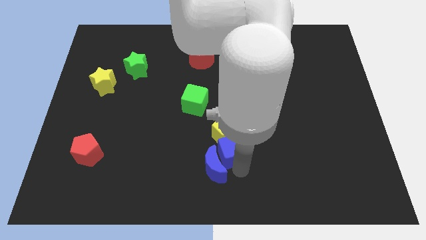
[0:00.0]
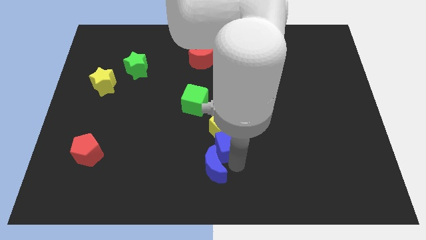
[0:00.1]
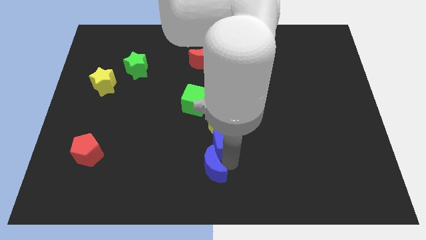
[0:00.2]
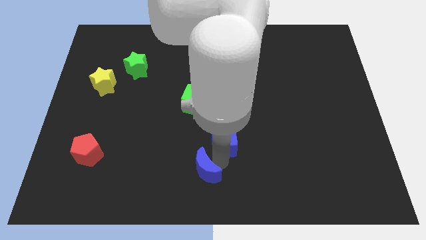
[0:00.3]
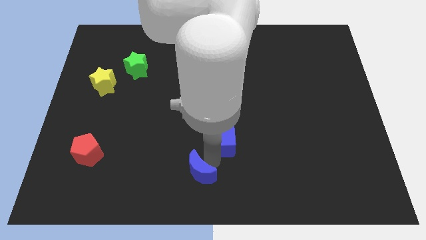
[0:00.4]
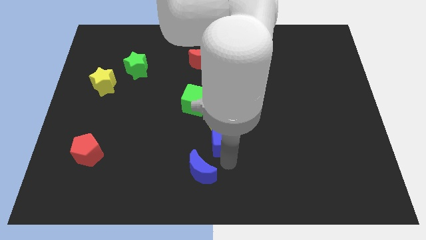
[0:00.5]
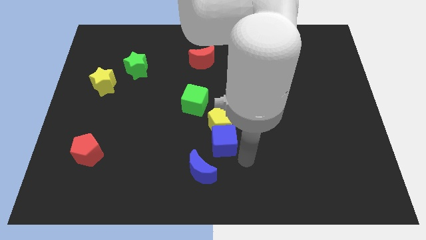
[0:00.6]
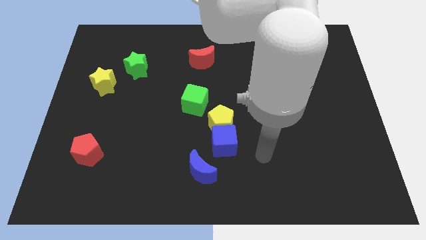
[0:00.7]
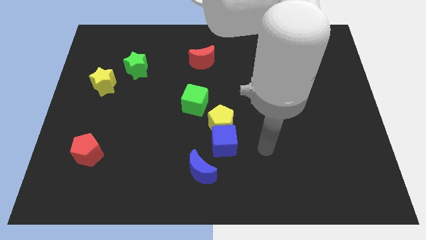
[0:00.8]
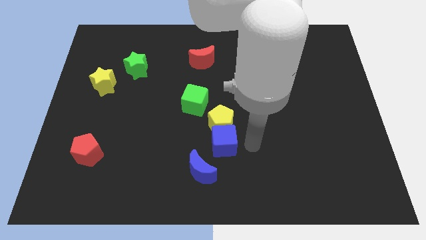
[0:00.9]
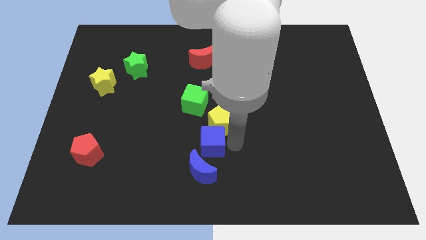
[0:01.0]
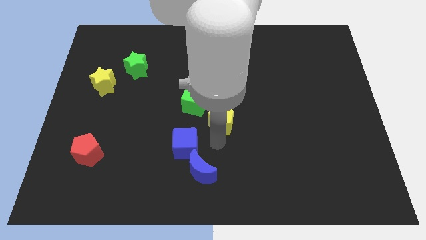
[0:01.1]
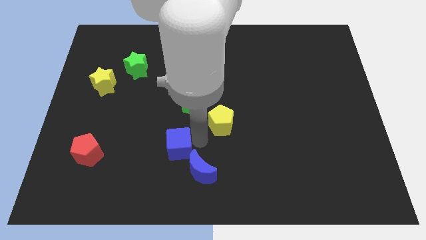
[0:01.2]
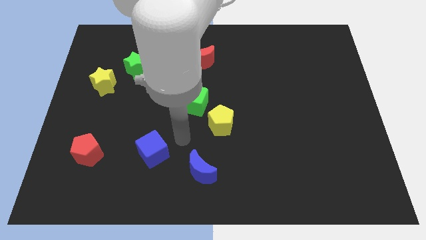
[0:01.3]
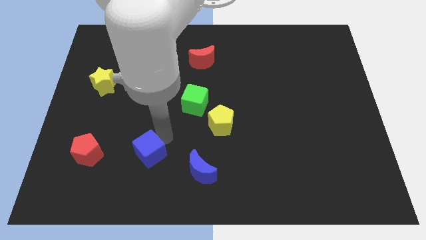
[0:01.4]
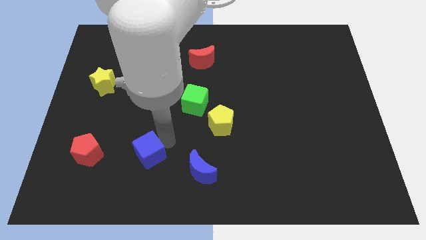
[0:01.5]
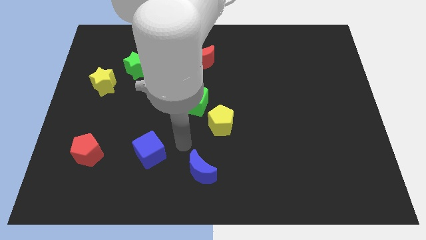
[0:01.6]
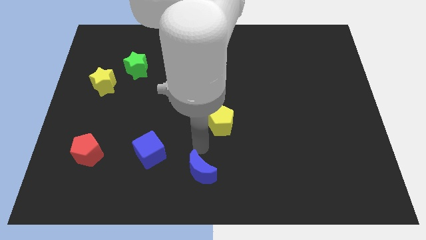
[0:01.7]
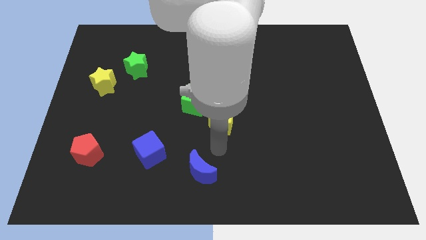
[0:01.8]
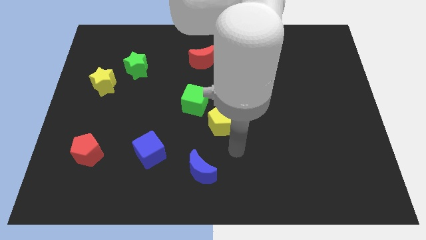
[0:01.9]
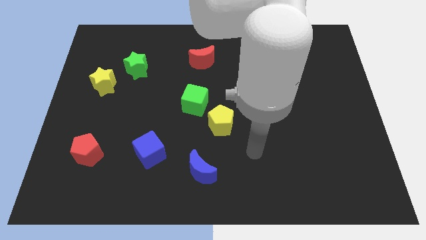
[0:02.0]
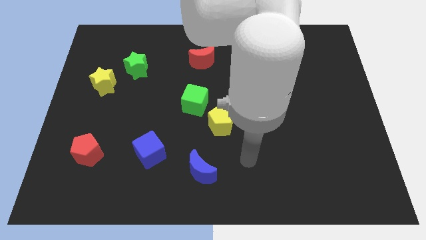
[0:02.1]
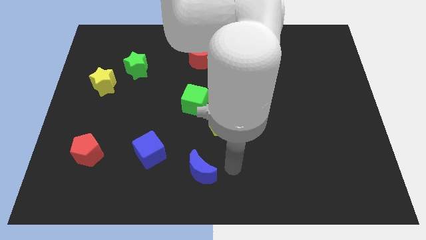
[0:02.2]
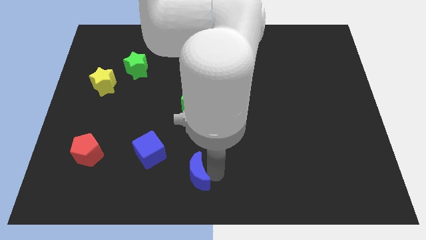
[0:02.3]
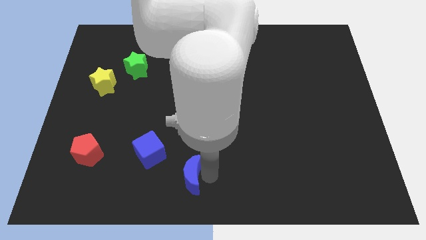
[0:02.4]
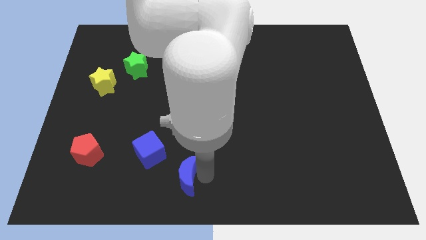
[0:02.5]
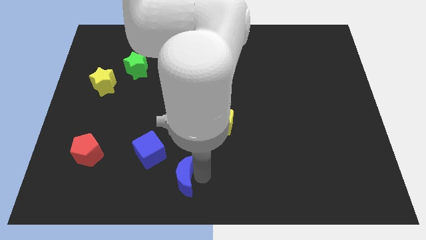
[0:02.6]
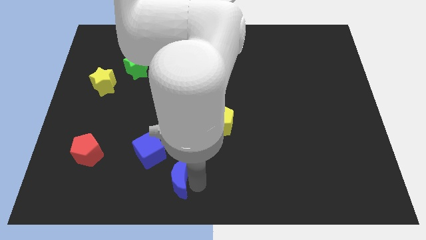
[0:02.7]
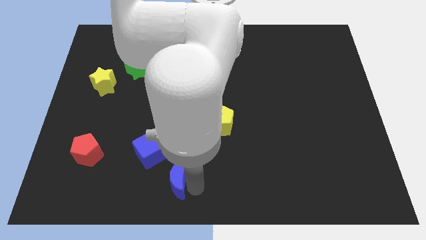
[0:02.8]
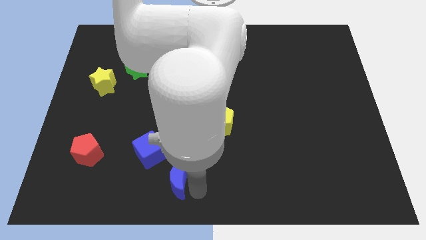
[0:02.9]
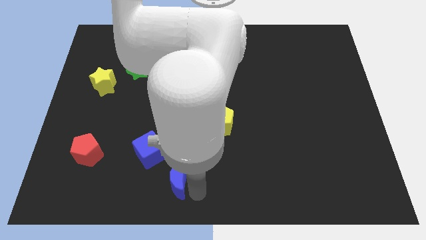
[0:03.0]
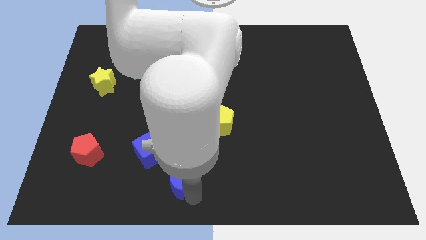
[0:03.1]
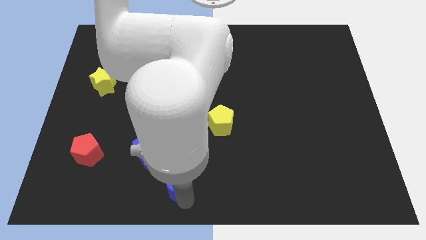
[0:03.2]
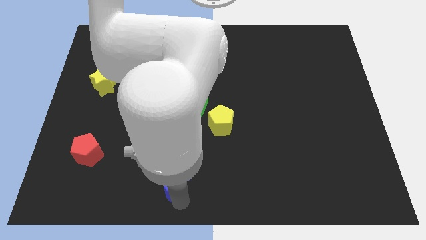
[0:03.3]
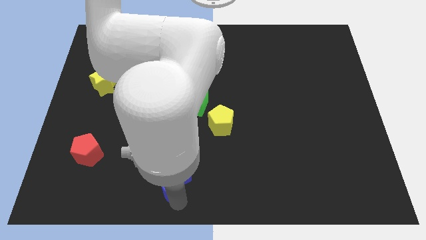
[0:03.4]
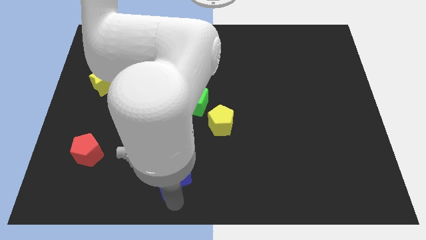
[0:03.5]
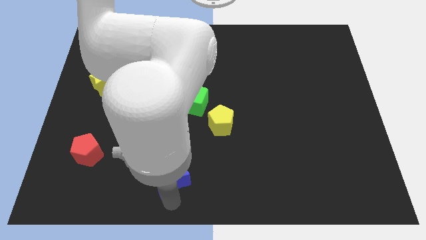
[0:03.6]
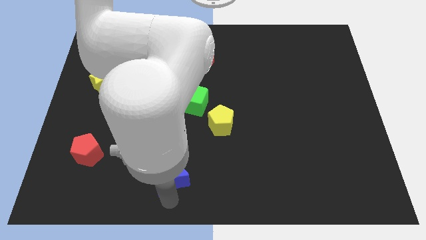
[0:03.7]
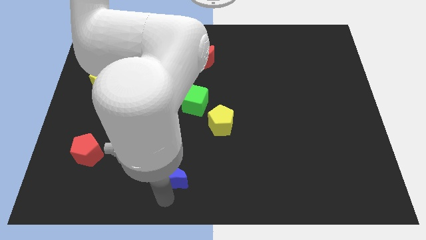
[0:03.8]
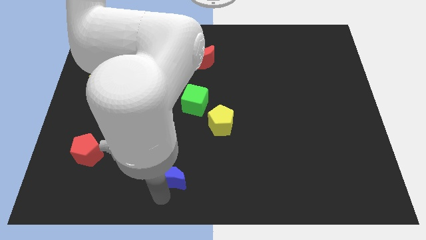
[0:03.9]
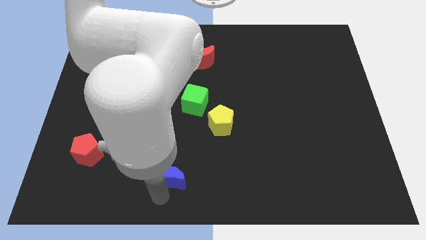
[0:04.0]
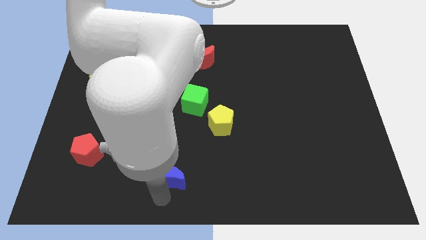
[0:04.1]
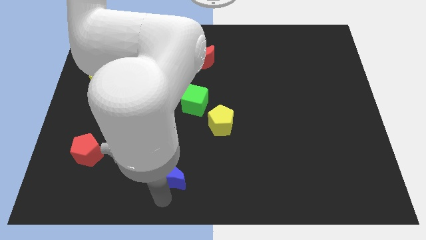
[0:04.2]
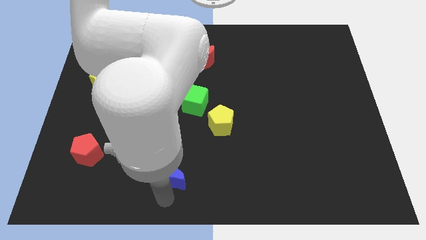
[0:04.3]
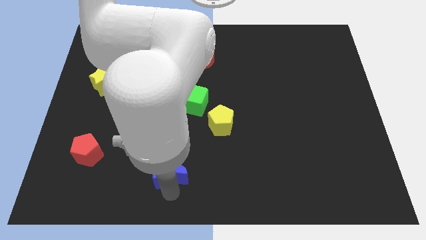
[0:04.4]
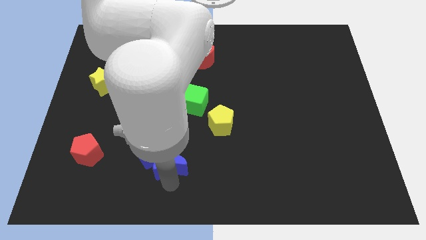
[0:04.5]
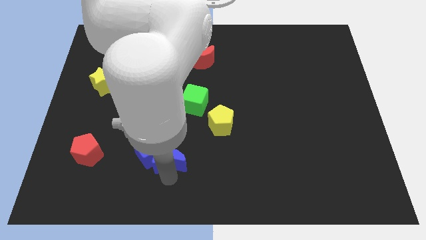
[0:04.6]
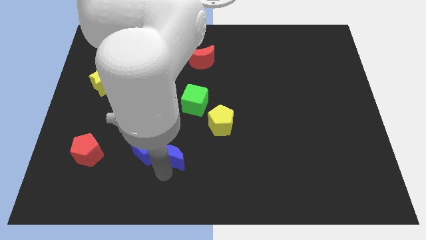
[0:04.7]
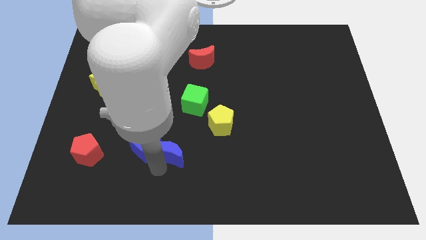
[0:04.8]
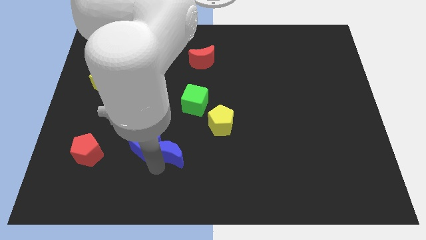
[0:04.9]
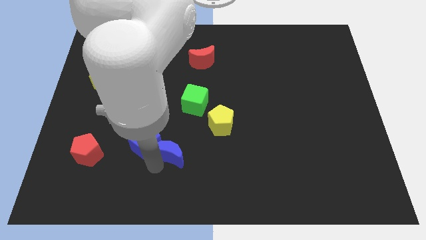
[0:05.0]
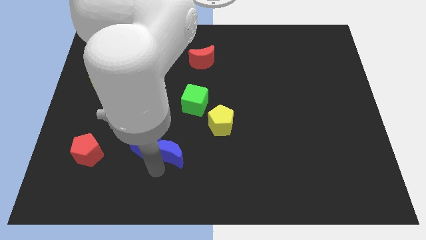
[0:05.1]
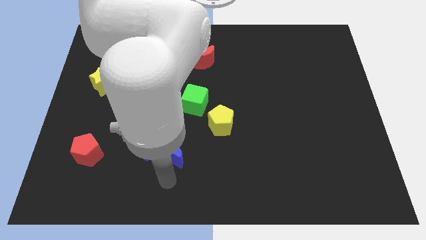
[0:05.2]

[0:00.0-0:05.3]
move the blue moon into the blue cube

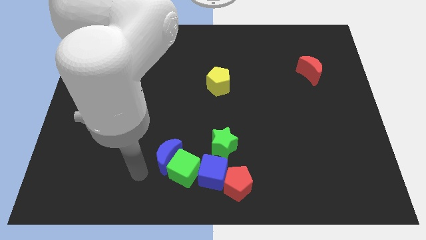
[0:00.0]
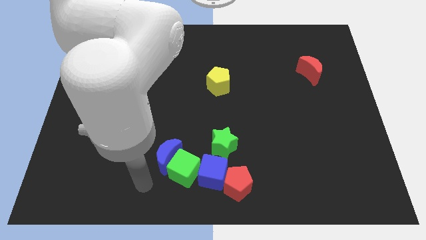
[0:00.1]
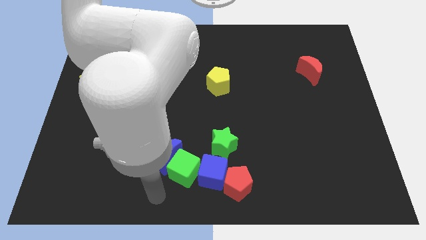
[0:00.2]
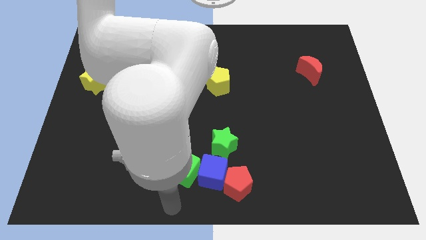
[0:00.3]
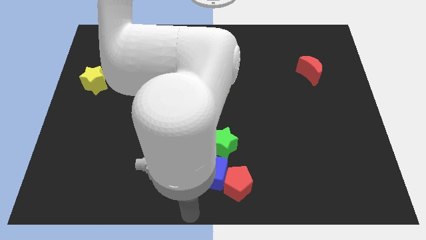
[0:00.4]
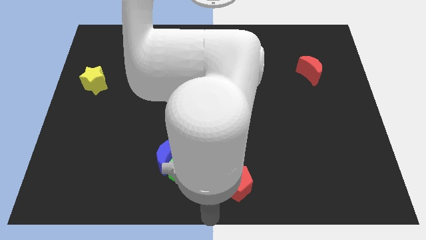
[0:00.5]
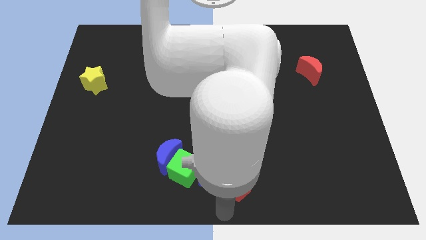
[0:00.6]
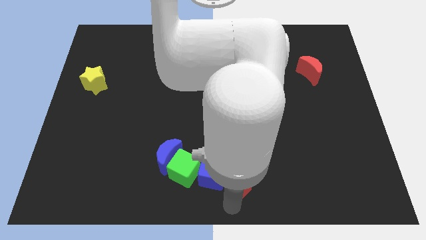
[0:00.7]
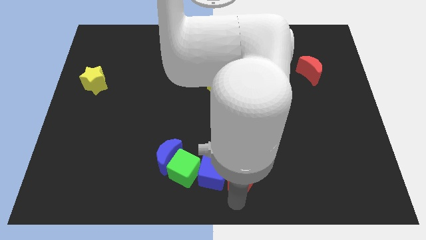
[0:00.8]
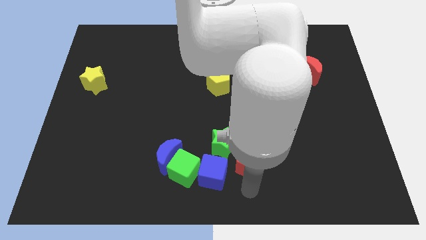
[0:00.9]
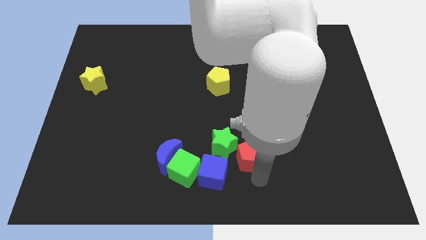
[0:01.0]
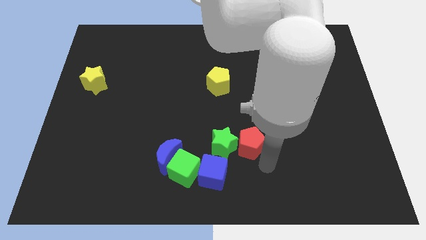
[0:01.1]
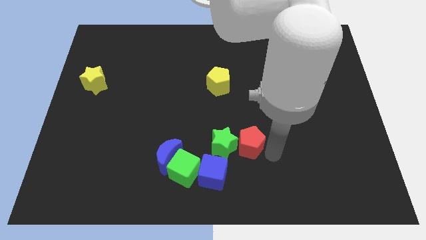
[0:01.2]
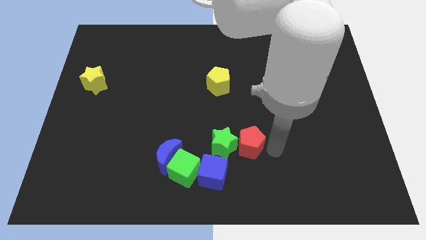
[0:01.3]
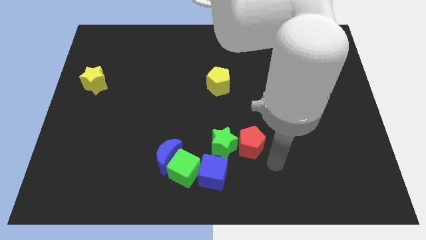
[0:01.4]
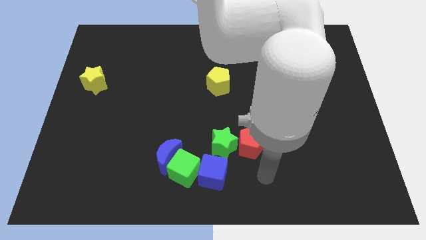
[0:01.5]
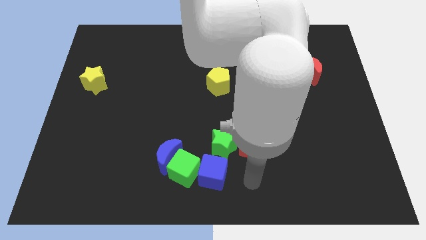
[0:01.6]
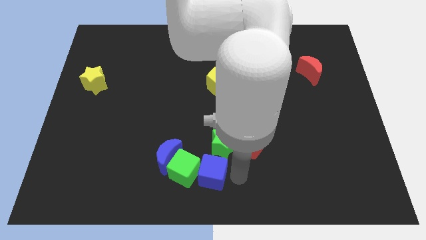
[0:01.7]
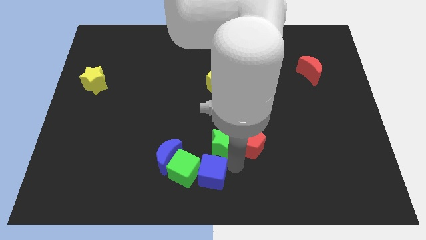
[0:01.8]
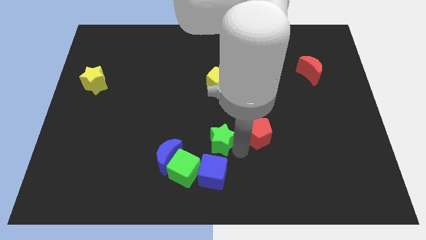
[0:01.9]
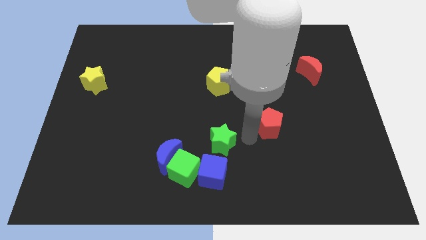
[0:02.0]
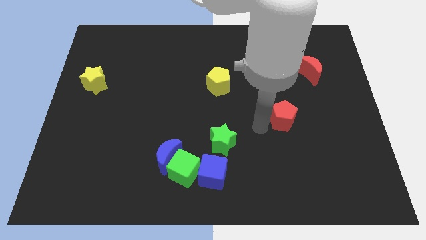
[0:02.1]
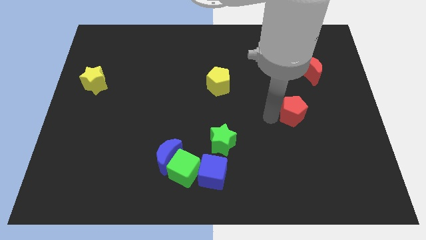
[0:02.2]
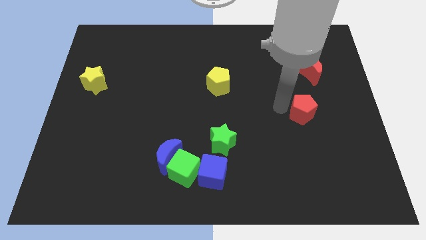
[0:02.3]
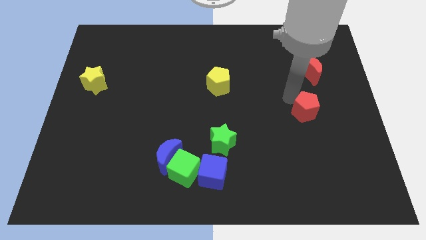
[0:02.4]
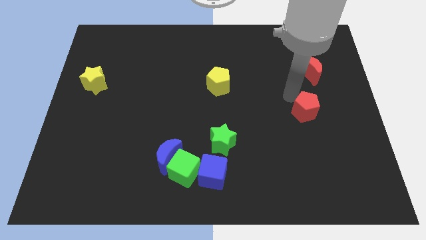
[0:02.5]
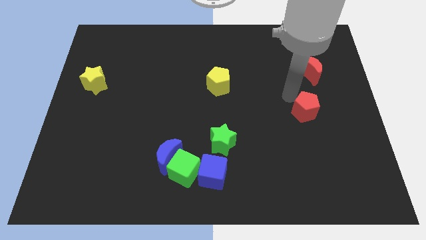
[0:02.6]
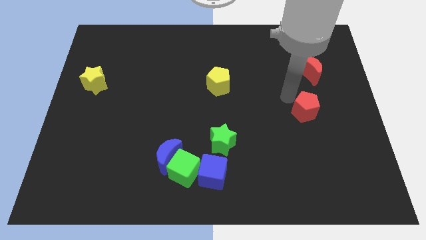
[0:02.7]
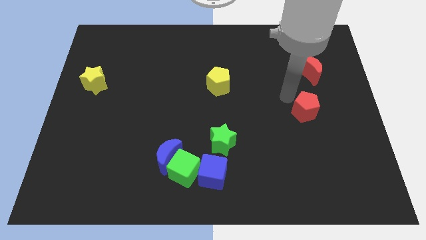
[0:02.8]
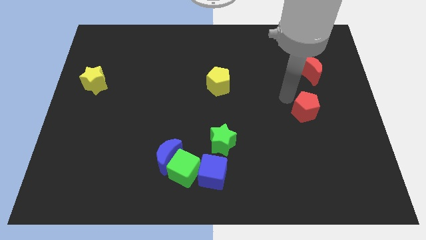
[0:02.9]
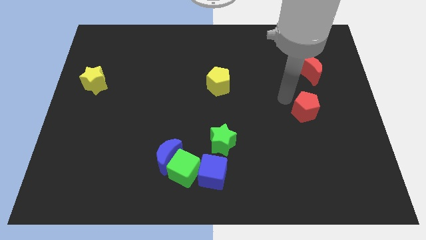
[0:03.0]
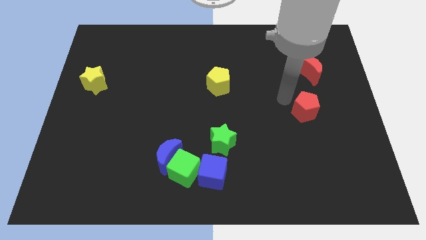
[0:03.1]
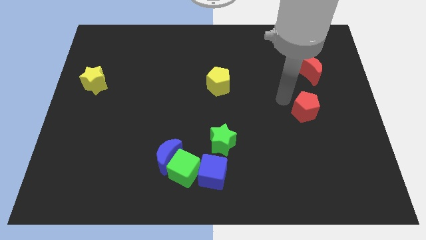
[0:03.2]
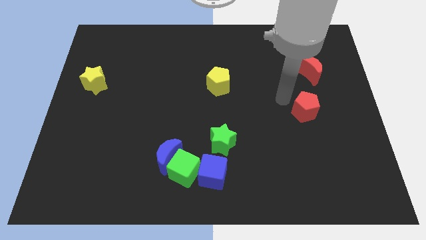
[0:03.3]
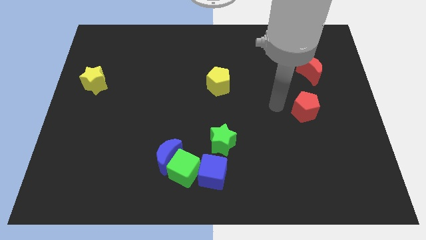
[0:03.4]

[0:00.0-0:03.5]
separate the red pentagon from the group of block

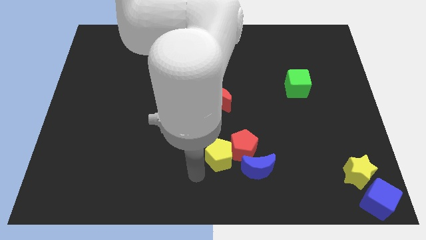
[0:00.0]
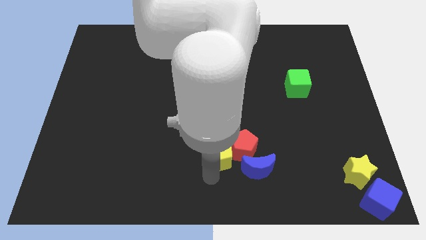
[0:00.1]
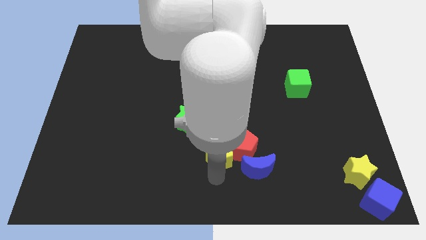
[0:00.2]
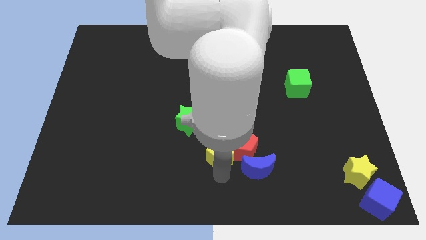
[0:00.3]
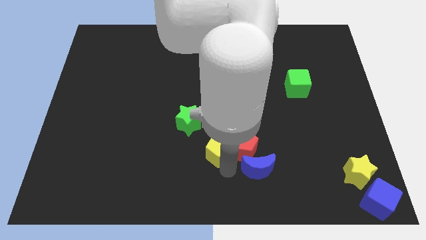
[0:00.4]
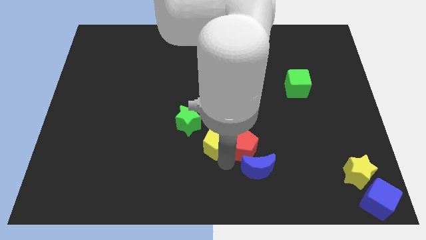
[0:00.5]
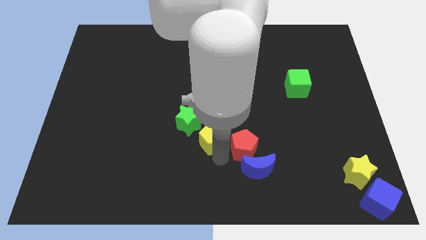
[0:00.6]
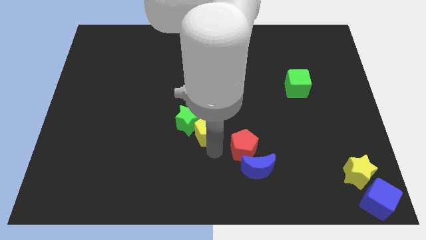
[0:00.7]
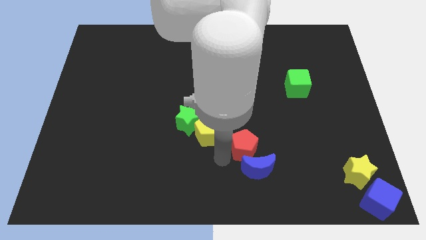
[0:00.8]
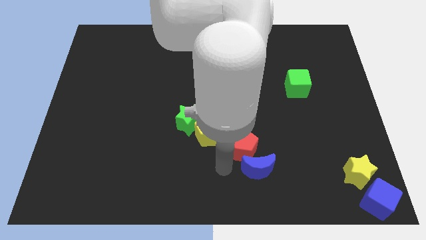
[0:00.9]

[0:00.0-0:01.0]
move the yellow pentagon into the green star
